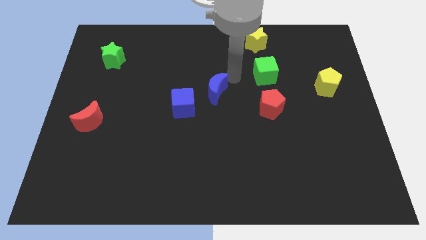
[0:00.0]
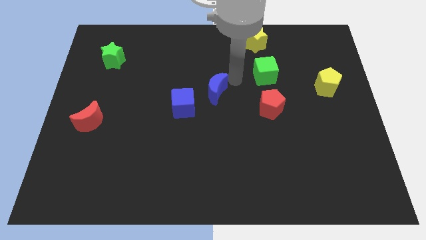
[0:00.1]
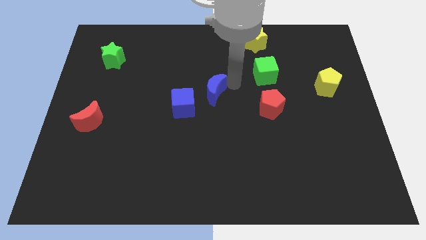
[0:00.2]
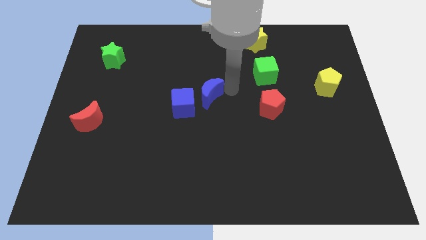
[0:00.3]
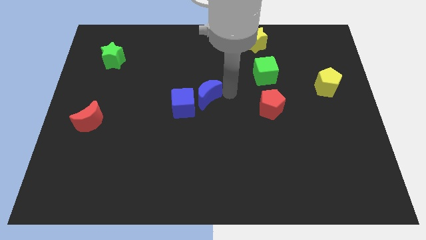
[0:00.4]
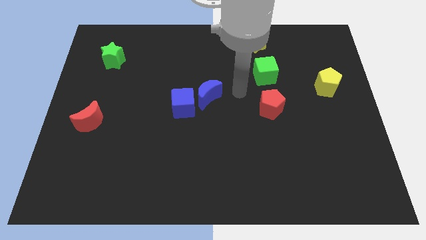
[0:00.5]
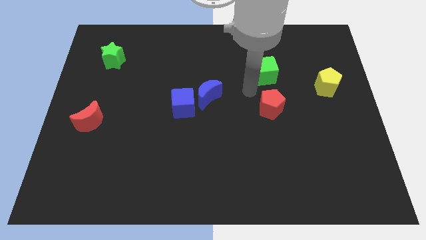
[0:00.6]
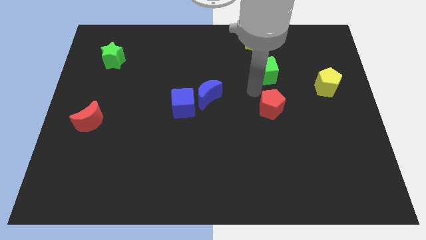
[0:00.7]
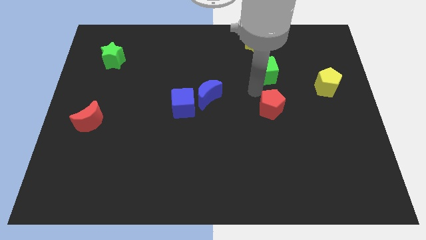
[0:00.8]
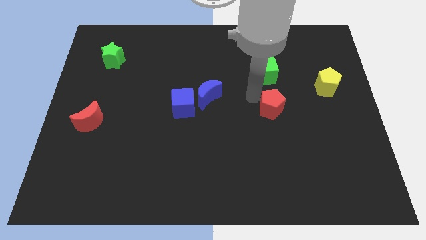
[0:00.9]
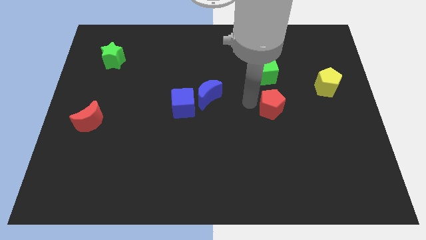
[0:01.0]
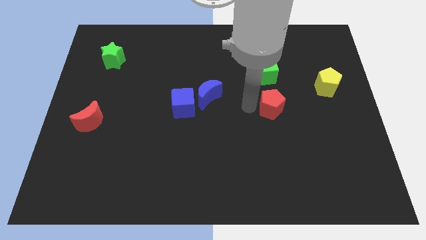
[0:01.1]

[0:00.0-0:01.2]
move blue moon right to the blue cube

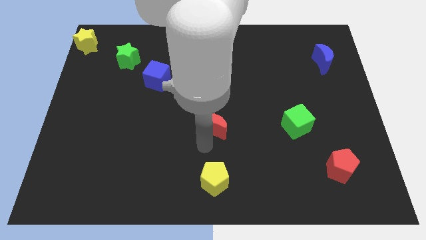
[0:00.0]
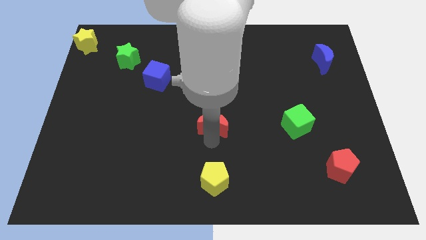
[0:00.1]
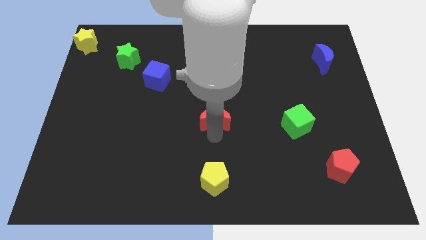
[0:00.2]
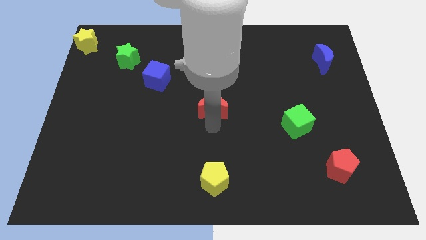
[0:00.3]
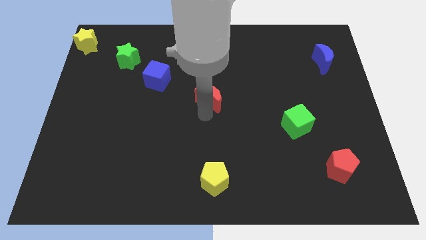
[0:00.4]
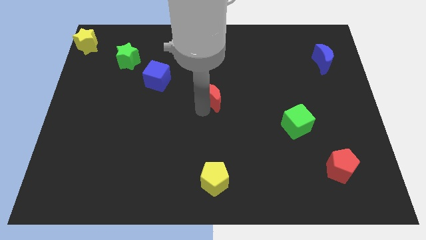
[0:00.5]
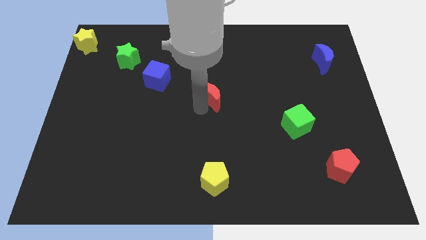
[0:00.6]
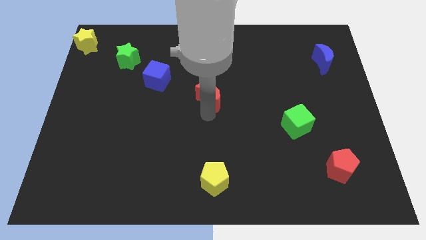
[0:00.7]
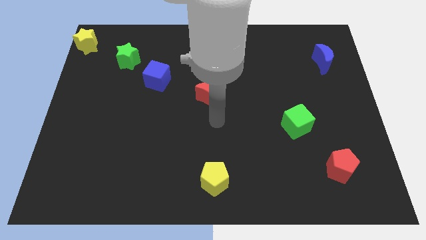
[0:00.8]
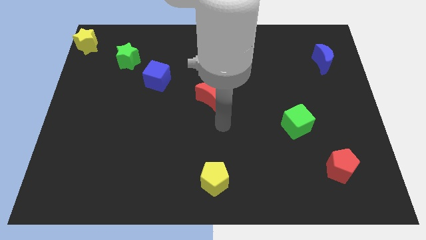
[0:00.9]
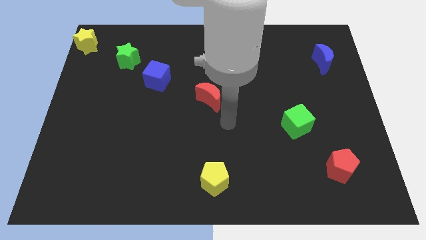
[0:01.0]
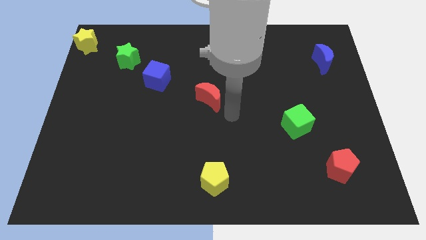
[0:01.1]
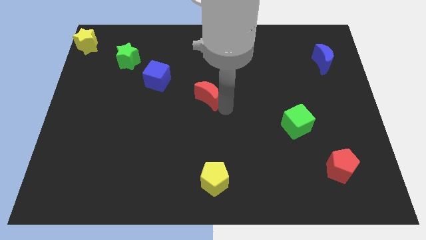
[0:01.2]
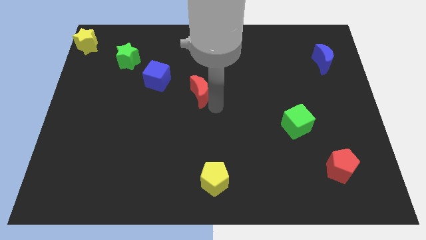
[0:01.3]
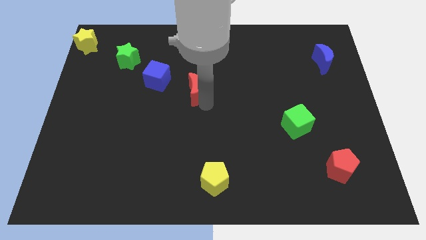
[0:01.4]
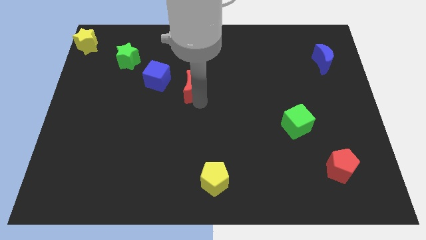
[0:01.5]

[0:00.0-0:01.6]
place red crescent below blue cube

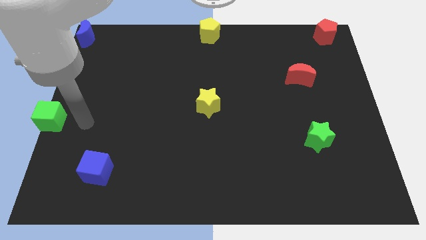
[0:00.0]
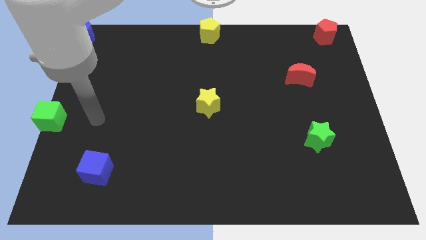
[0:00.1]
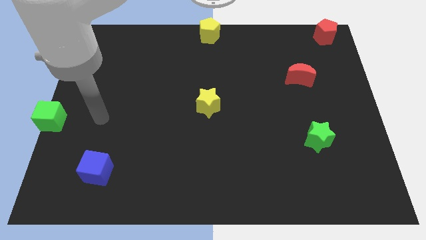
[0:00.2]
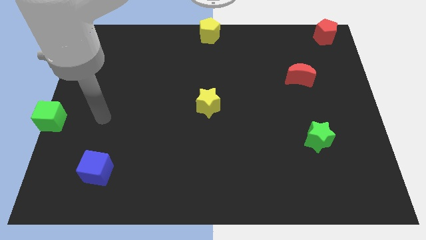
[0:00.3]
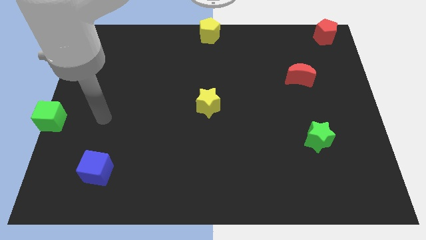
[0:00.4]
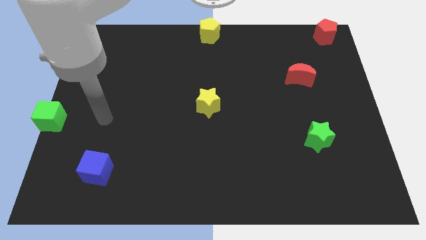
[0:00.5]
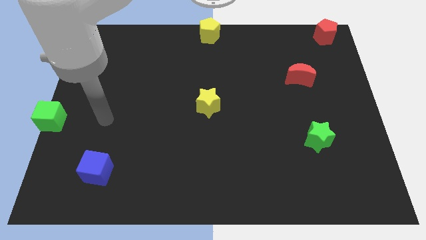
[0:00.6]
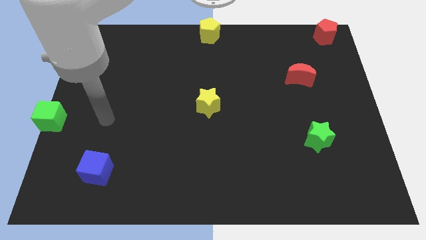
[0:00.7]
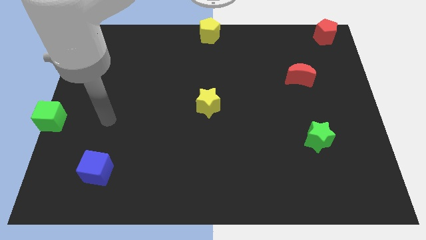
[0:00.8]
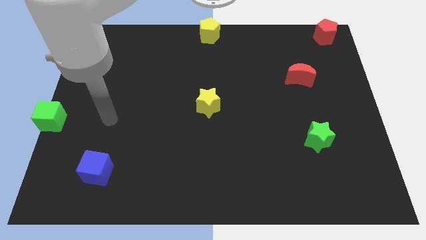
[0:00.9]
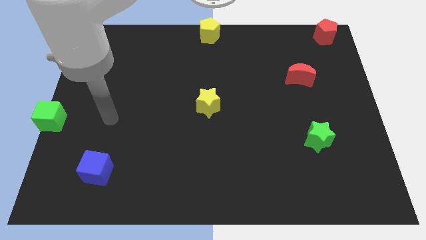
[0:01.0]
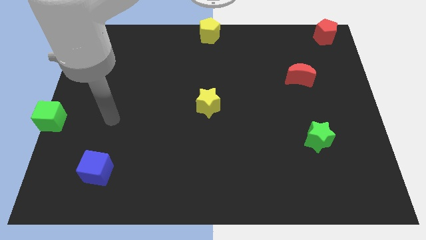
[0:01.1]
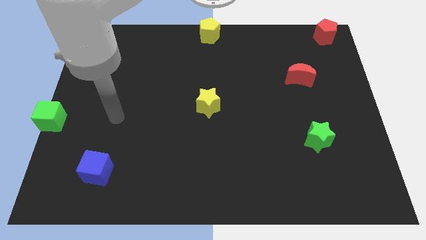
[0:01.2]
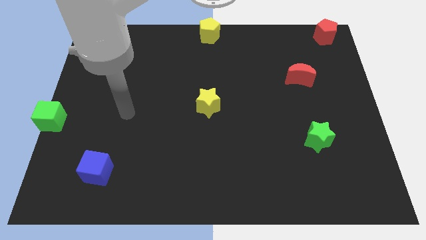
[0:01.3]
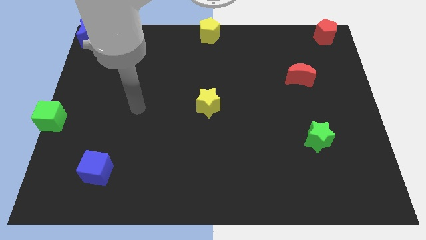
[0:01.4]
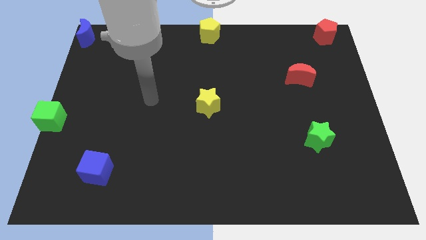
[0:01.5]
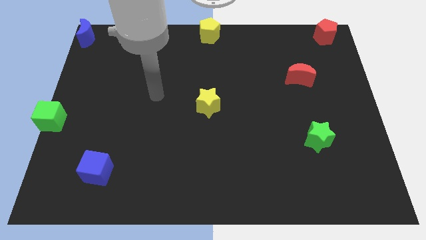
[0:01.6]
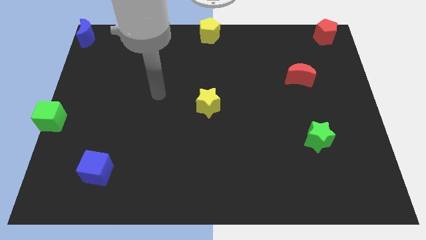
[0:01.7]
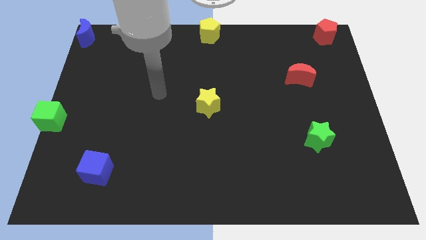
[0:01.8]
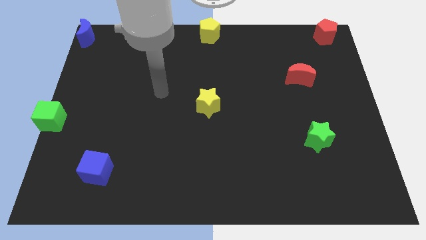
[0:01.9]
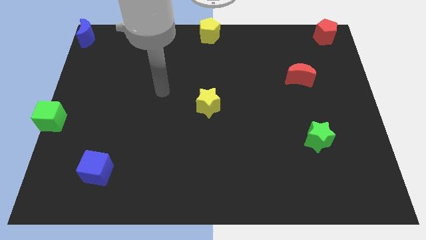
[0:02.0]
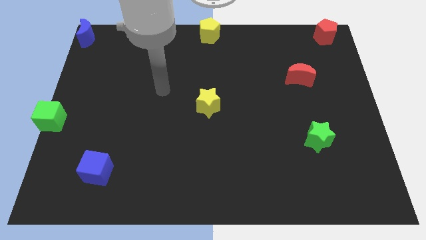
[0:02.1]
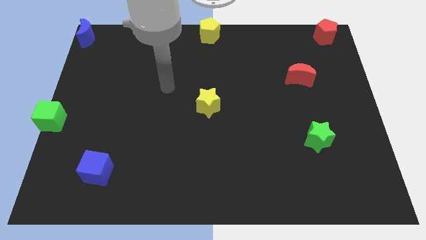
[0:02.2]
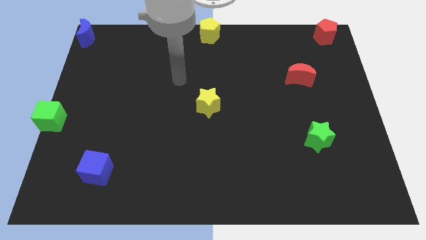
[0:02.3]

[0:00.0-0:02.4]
move the hand towards the top center of the board

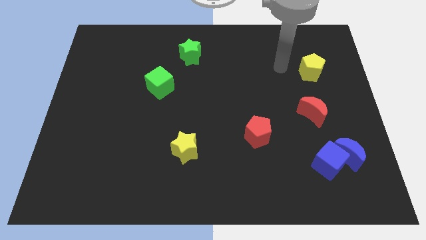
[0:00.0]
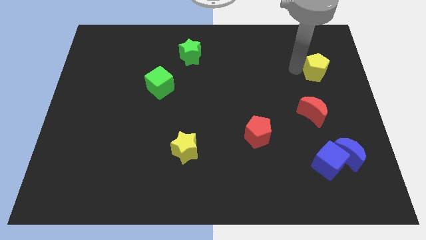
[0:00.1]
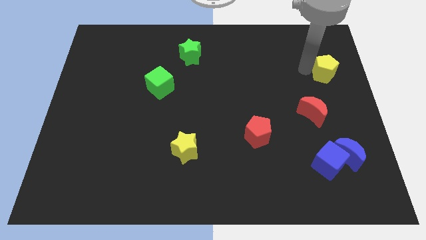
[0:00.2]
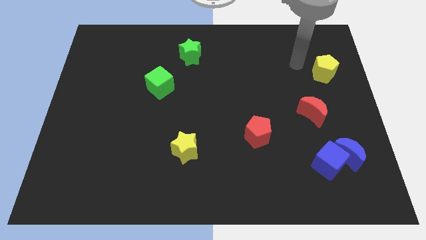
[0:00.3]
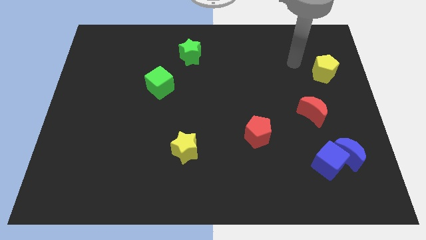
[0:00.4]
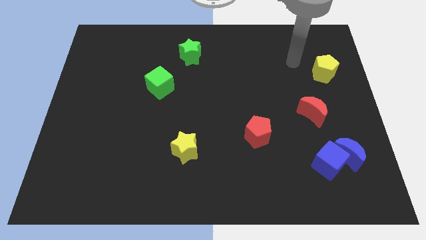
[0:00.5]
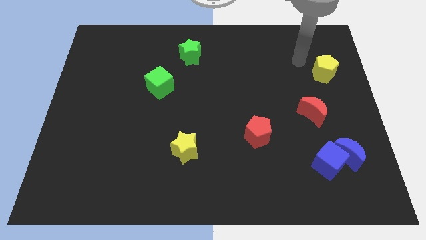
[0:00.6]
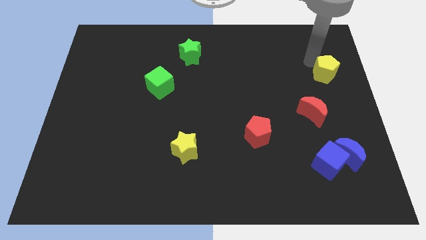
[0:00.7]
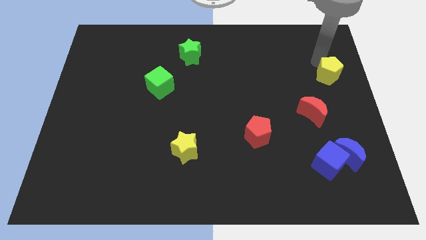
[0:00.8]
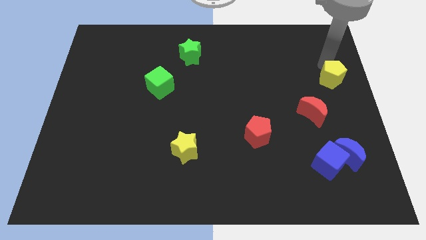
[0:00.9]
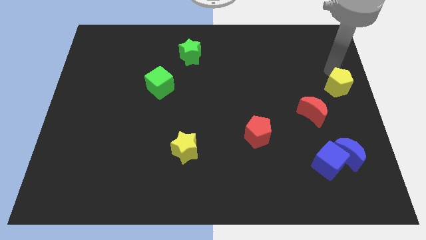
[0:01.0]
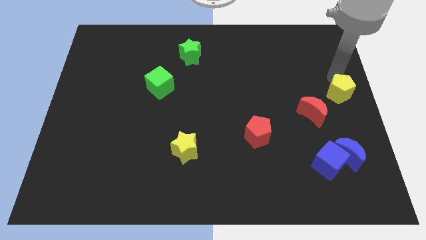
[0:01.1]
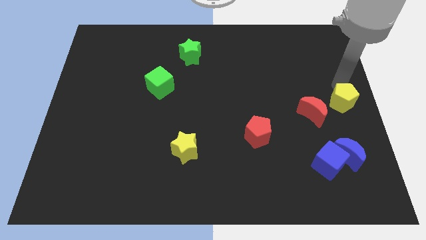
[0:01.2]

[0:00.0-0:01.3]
move the yellow pentagon towards the right of red moon

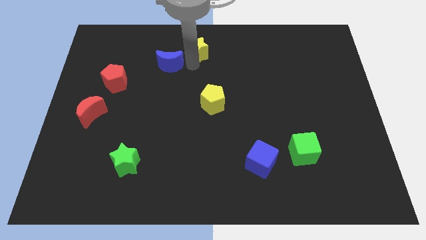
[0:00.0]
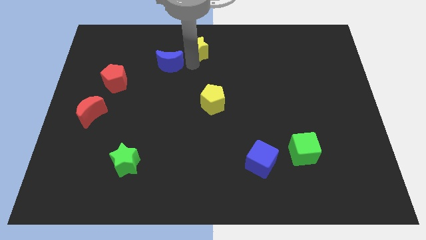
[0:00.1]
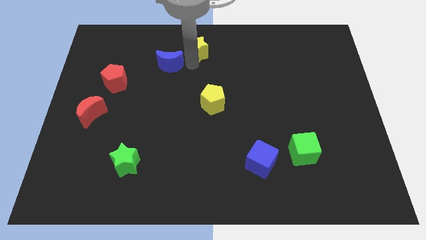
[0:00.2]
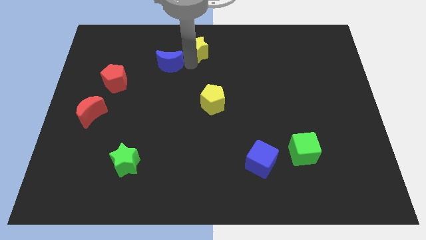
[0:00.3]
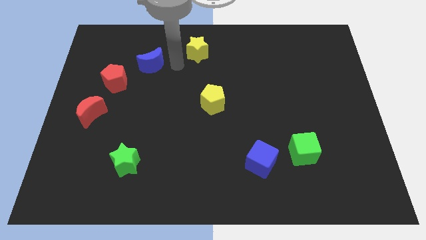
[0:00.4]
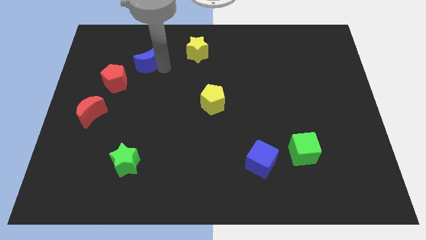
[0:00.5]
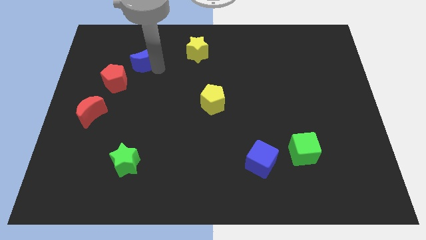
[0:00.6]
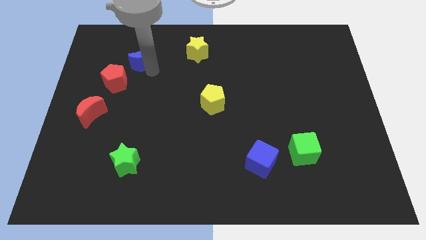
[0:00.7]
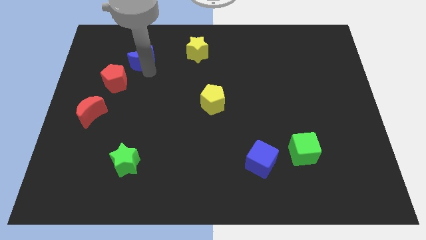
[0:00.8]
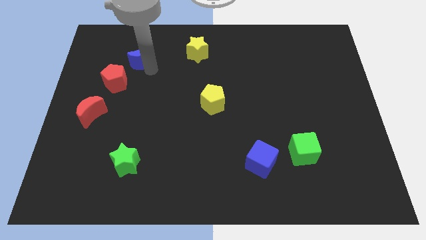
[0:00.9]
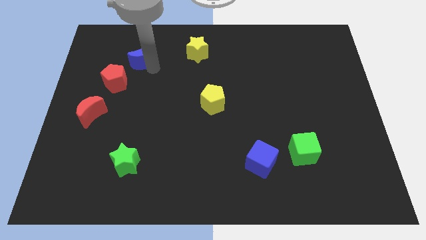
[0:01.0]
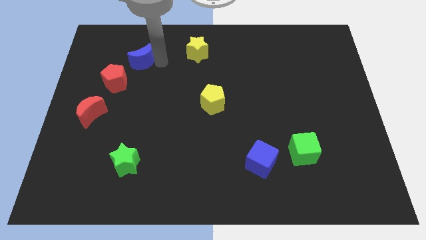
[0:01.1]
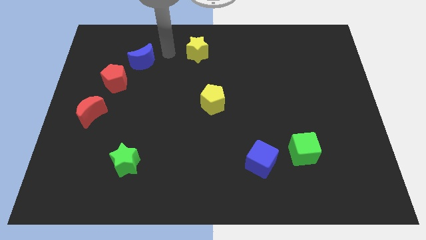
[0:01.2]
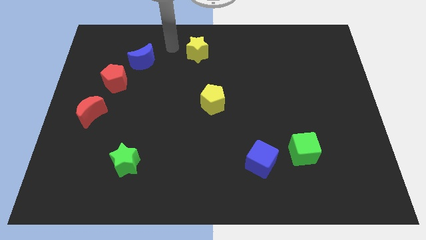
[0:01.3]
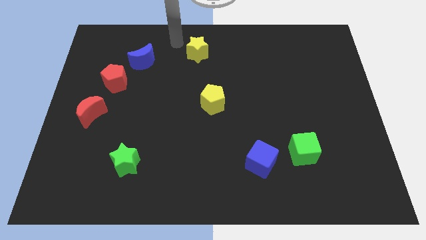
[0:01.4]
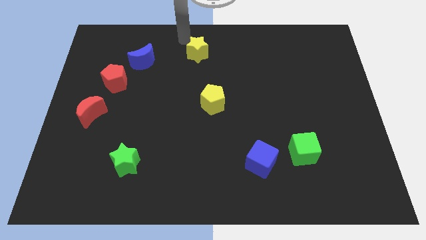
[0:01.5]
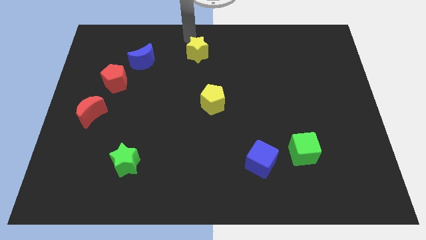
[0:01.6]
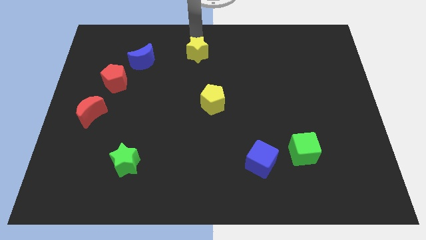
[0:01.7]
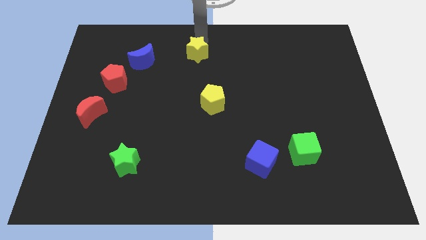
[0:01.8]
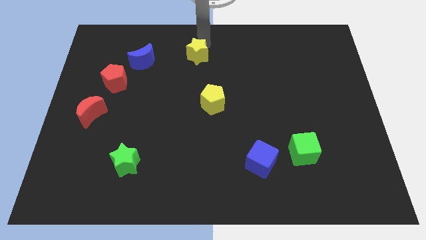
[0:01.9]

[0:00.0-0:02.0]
move the blue crescent towards the red pentagon

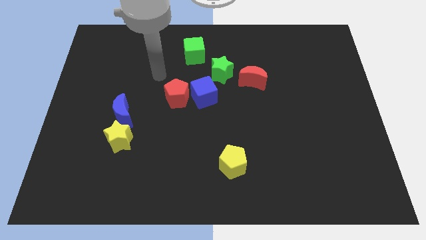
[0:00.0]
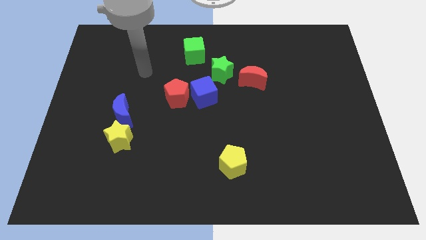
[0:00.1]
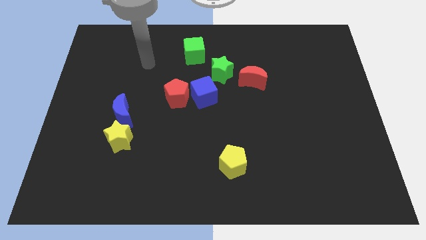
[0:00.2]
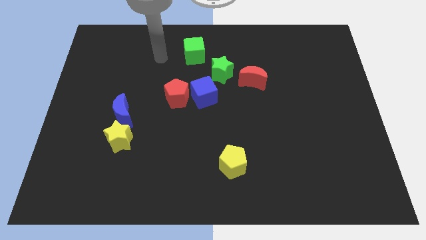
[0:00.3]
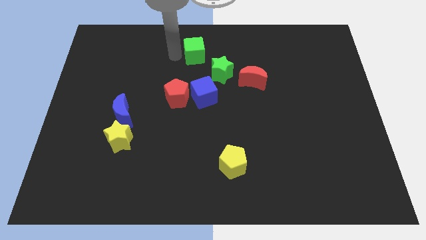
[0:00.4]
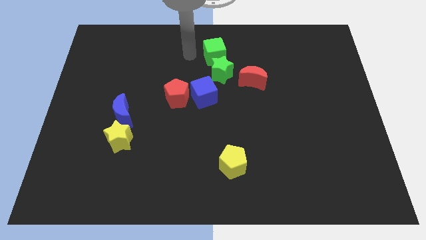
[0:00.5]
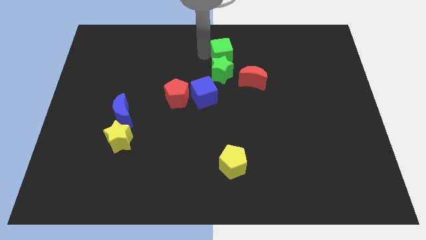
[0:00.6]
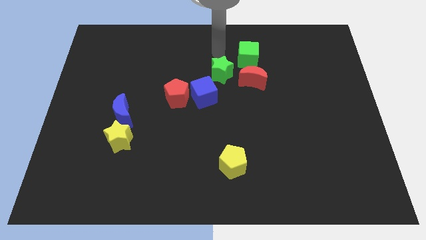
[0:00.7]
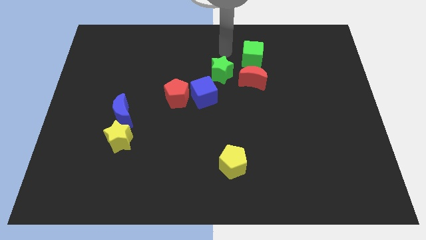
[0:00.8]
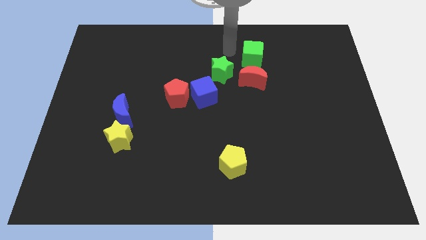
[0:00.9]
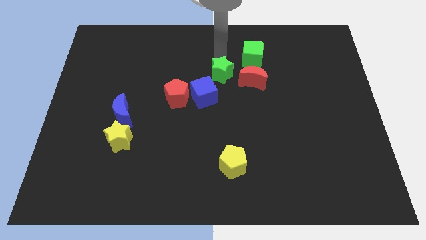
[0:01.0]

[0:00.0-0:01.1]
slide the green star on the top of red moon
